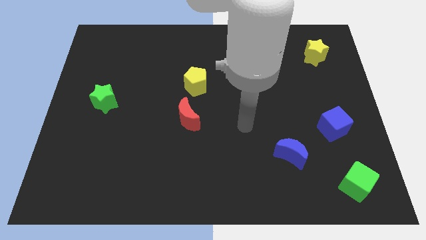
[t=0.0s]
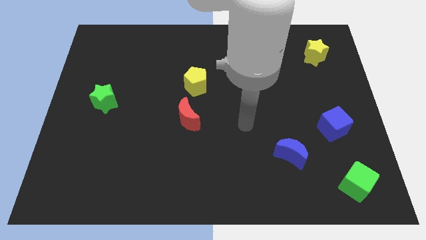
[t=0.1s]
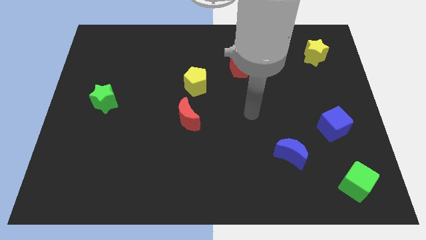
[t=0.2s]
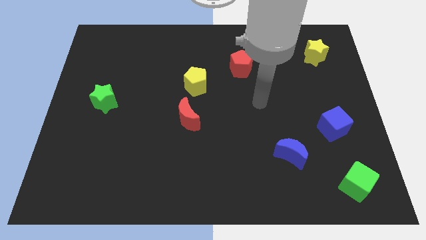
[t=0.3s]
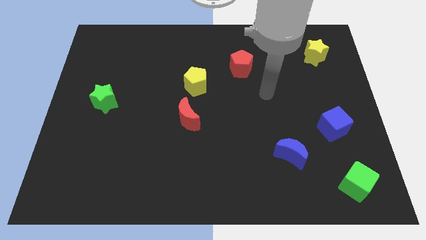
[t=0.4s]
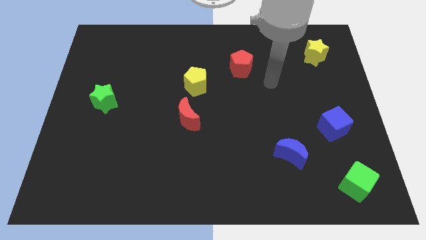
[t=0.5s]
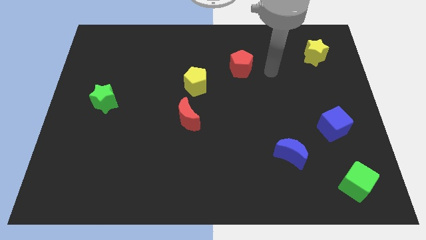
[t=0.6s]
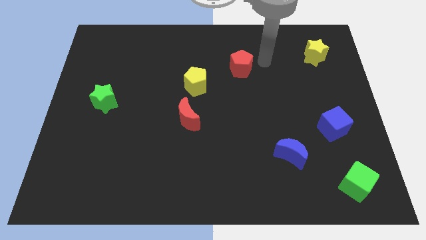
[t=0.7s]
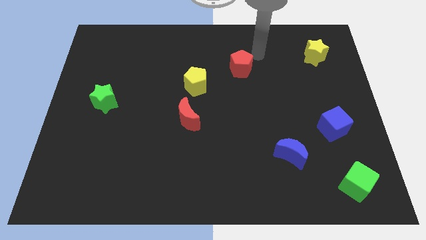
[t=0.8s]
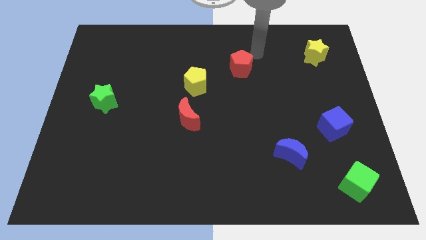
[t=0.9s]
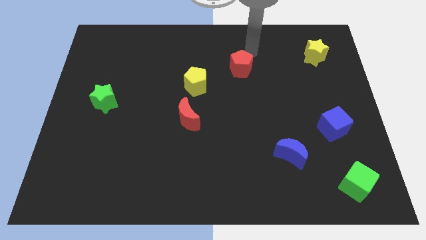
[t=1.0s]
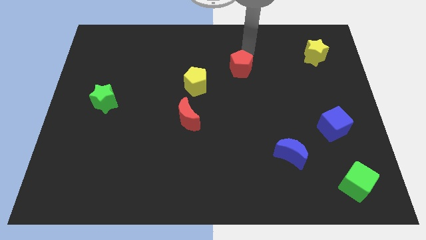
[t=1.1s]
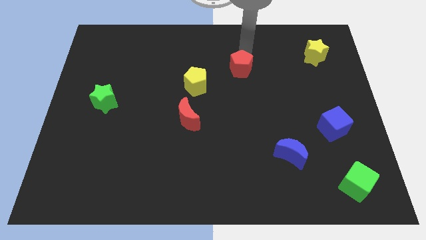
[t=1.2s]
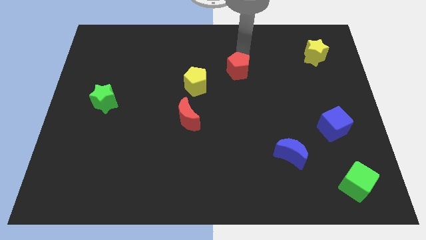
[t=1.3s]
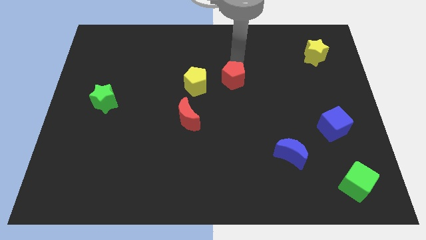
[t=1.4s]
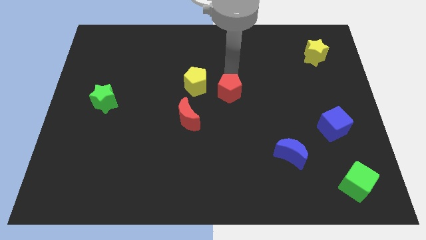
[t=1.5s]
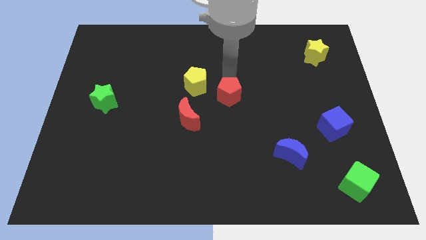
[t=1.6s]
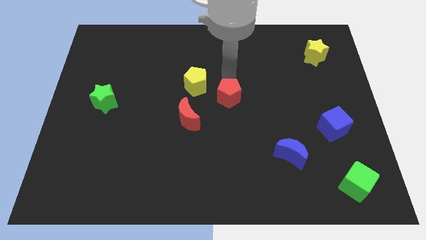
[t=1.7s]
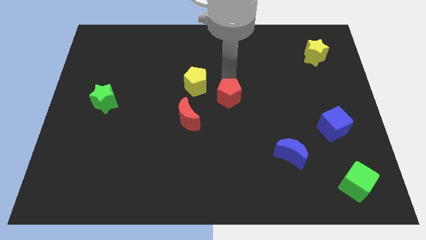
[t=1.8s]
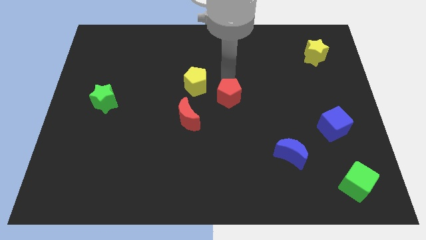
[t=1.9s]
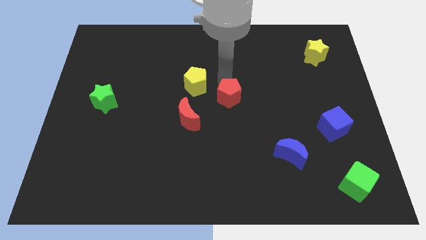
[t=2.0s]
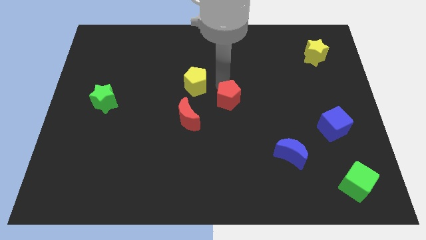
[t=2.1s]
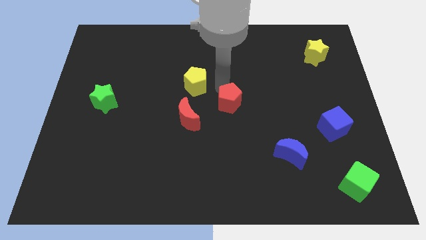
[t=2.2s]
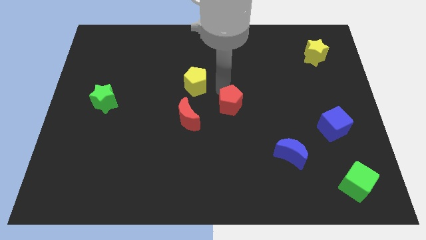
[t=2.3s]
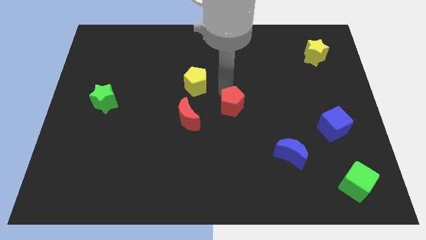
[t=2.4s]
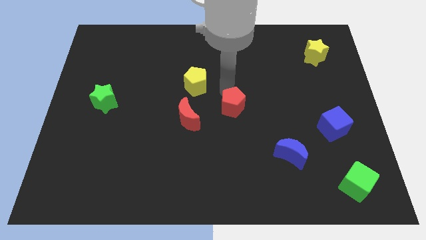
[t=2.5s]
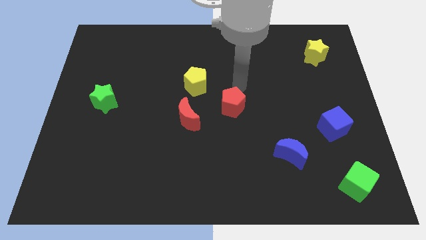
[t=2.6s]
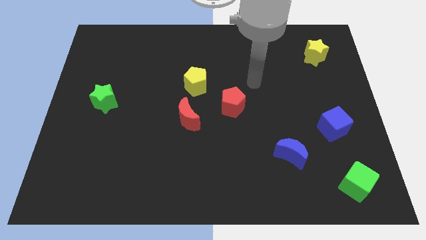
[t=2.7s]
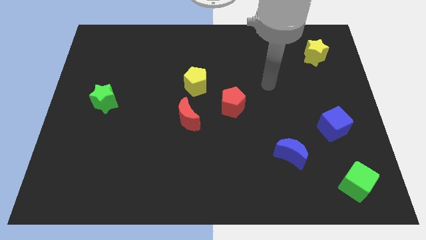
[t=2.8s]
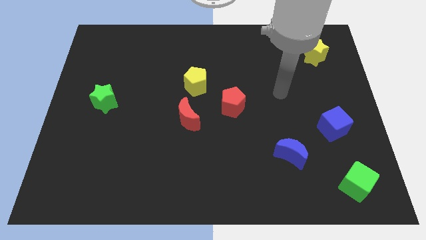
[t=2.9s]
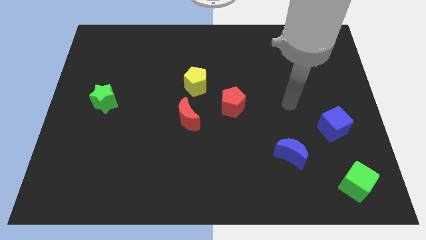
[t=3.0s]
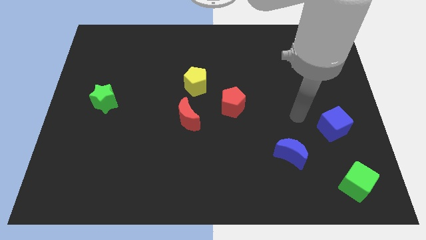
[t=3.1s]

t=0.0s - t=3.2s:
place the red pentagon at the bottom right of the yellow pentagon

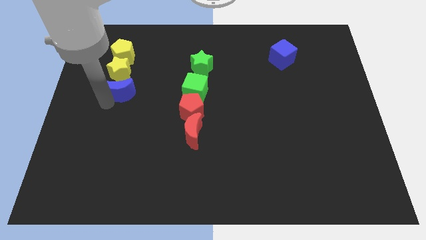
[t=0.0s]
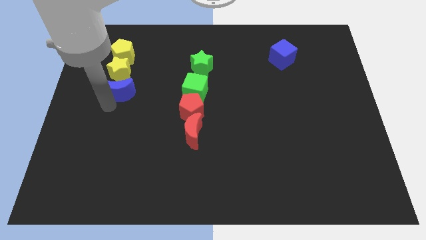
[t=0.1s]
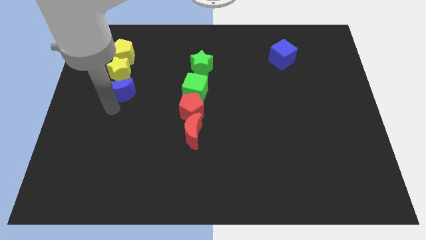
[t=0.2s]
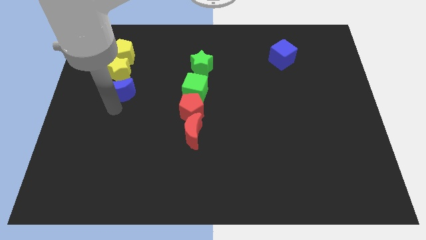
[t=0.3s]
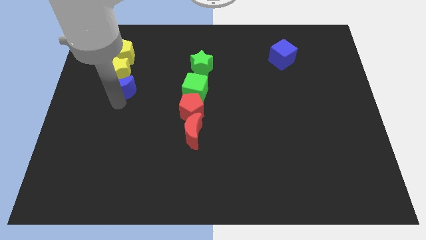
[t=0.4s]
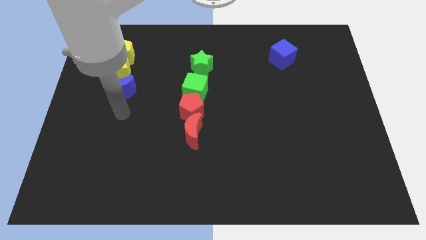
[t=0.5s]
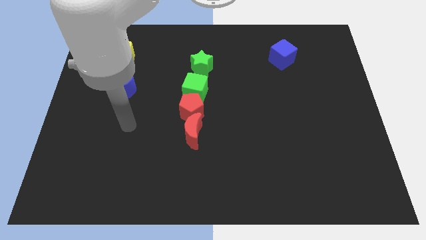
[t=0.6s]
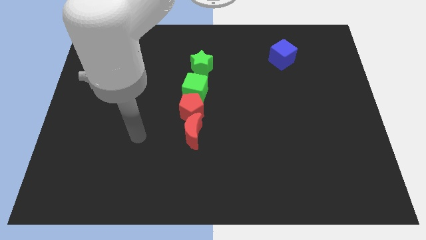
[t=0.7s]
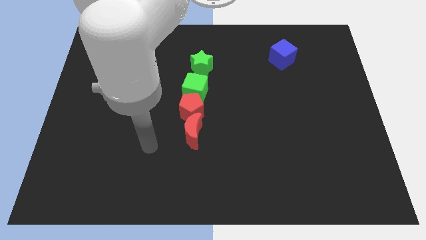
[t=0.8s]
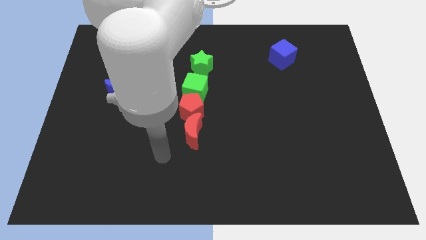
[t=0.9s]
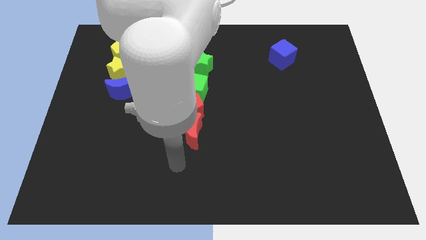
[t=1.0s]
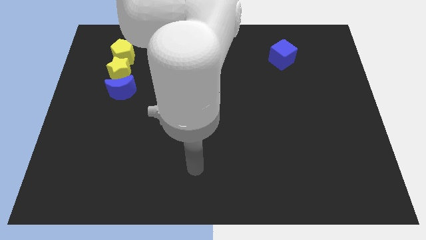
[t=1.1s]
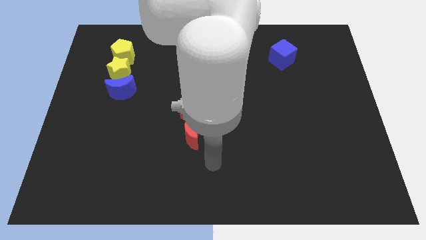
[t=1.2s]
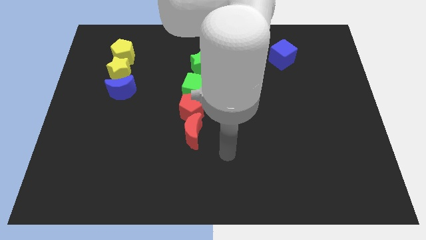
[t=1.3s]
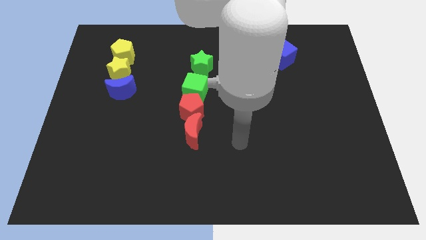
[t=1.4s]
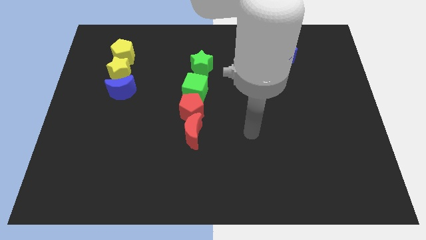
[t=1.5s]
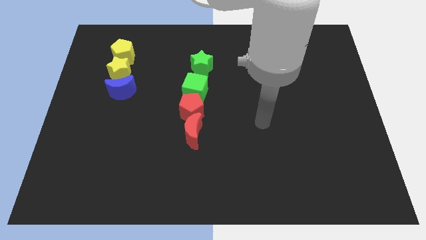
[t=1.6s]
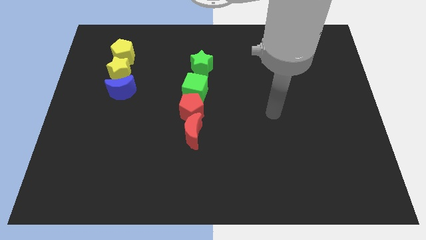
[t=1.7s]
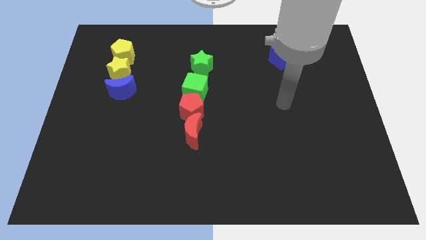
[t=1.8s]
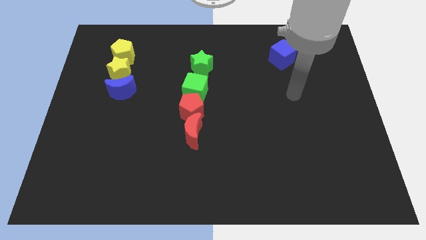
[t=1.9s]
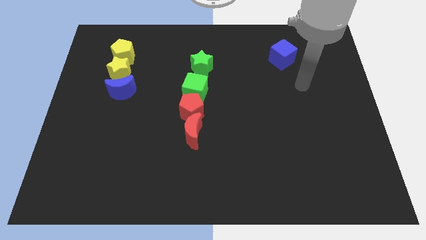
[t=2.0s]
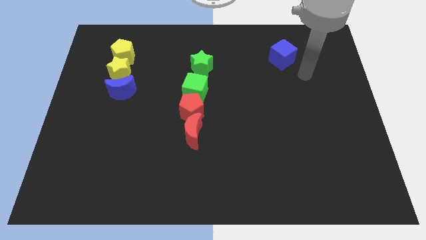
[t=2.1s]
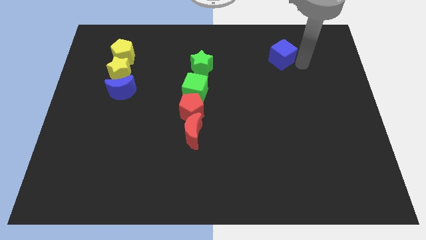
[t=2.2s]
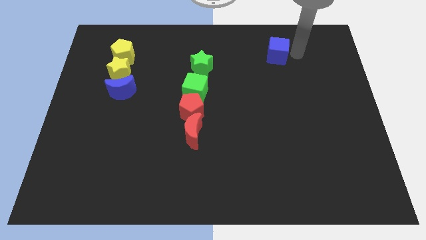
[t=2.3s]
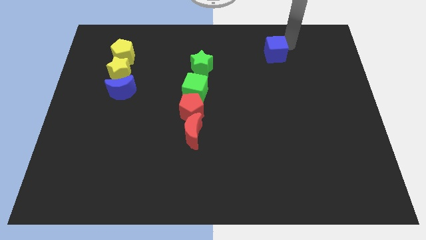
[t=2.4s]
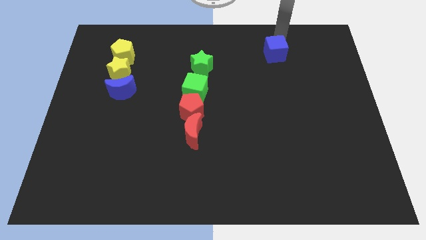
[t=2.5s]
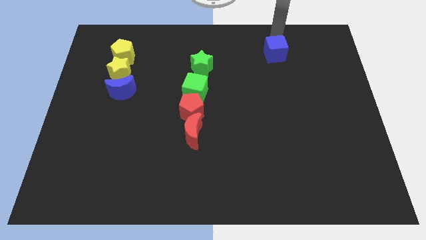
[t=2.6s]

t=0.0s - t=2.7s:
move your arm away from the blue moon

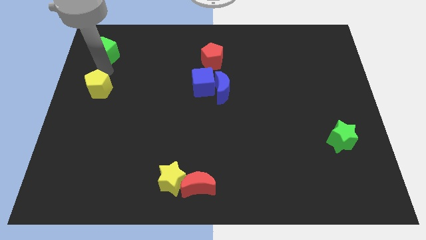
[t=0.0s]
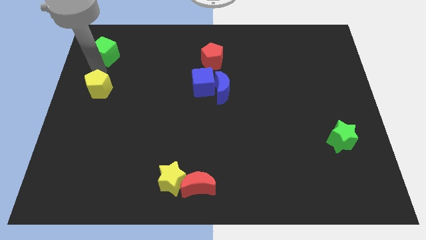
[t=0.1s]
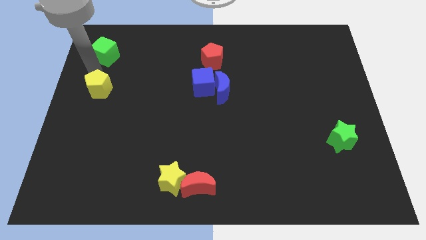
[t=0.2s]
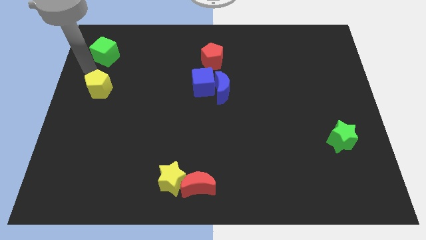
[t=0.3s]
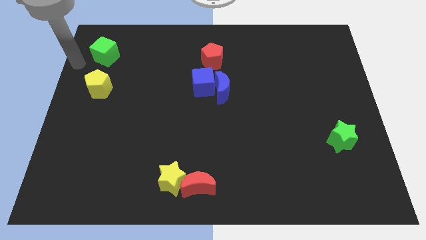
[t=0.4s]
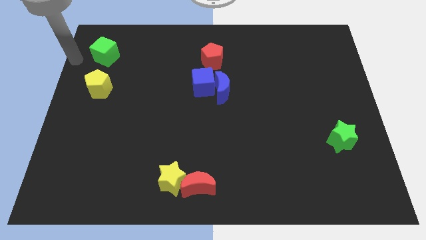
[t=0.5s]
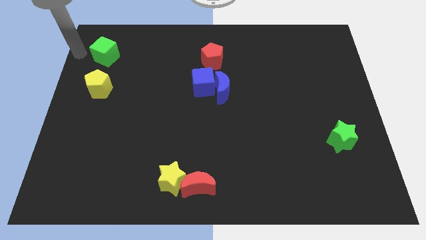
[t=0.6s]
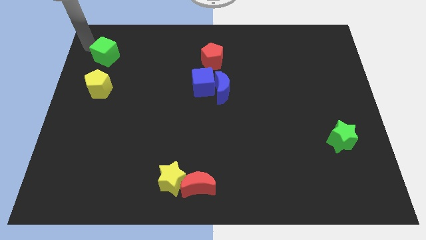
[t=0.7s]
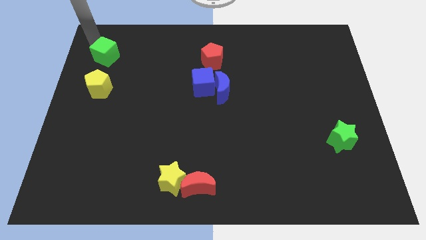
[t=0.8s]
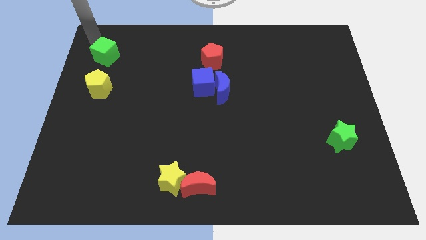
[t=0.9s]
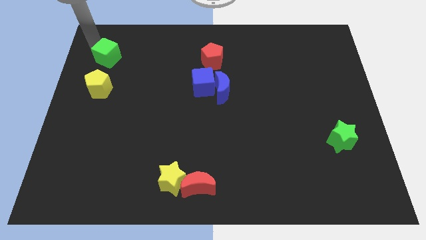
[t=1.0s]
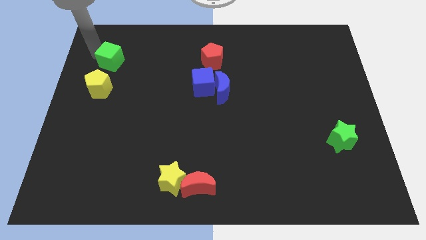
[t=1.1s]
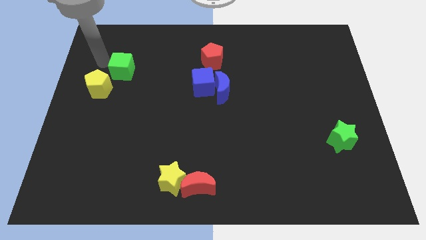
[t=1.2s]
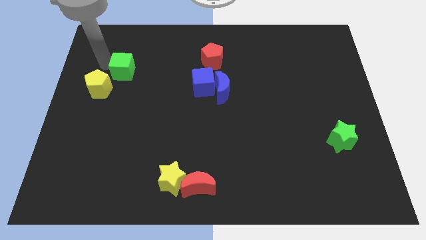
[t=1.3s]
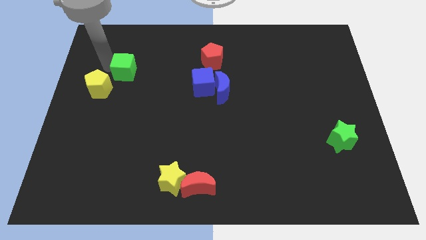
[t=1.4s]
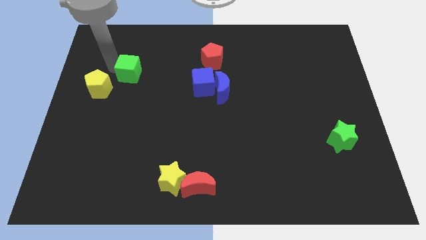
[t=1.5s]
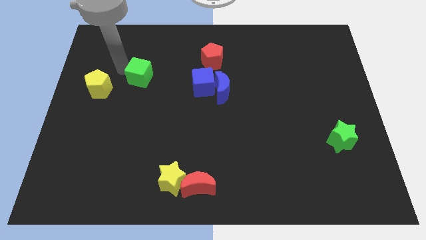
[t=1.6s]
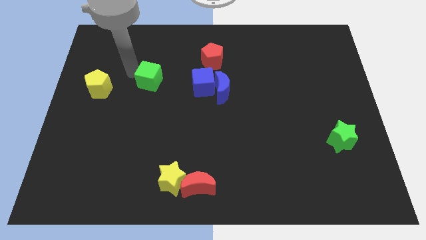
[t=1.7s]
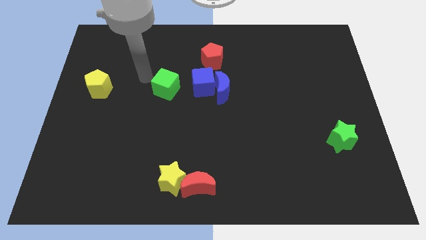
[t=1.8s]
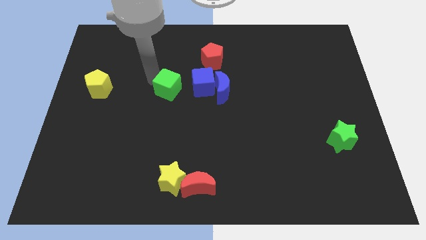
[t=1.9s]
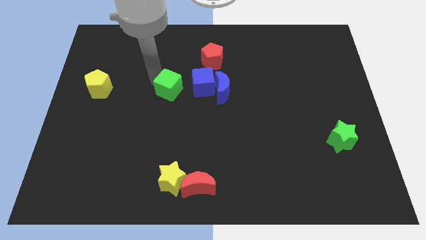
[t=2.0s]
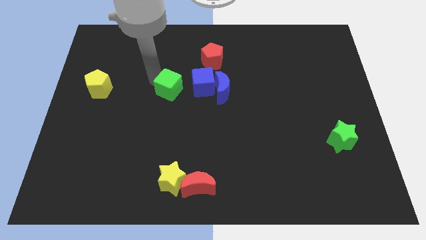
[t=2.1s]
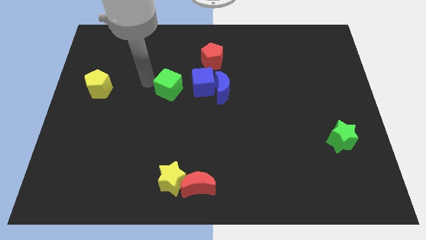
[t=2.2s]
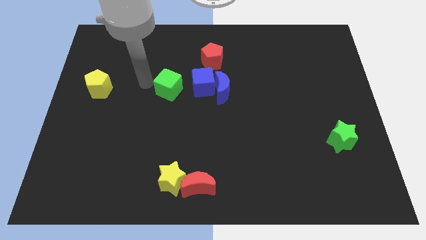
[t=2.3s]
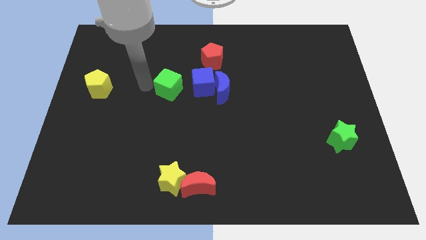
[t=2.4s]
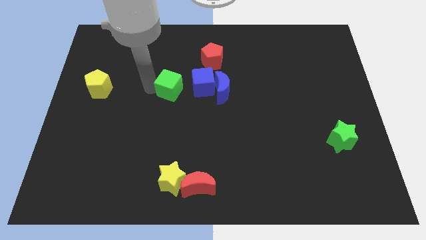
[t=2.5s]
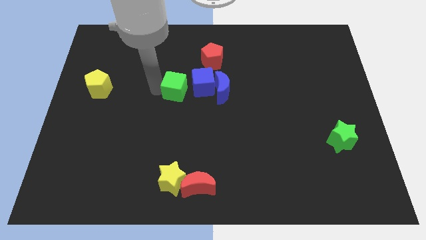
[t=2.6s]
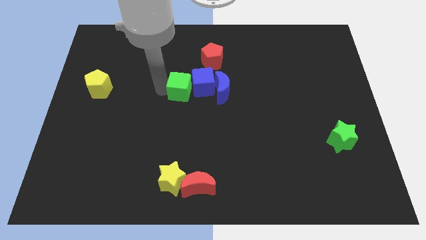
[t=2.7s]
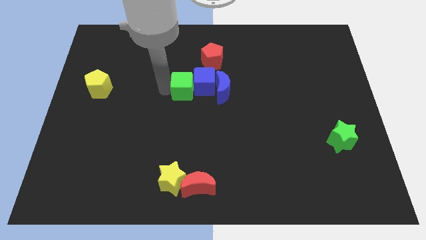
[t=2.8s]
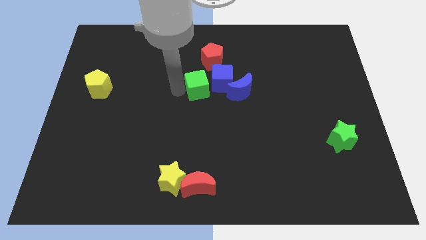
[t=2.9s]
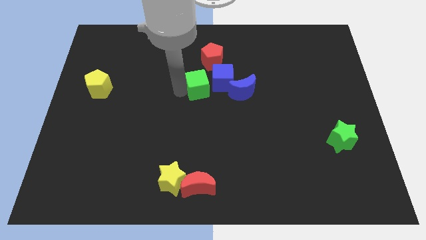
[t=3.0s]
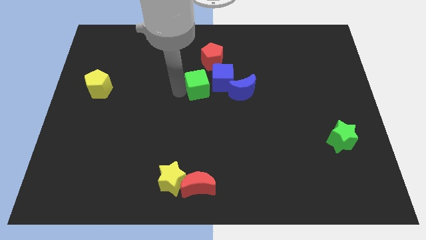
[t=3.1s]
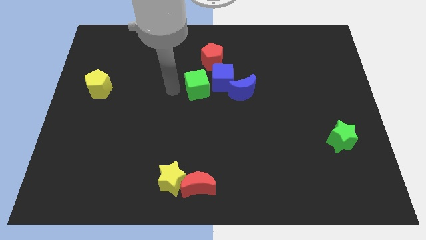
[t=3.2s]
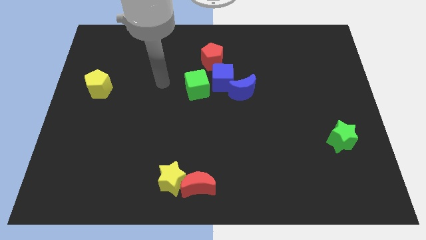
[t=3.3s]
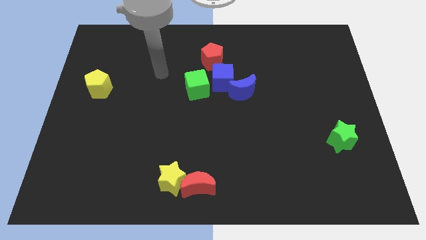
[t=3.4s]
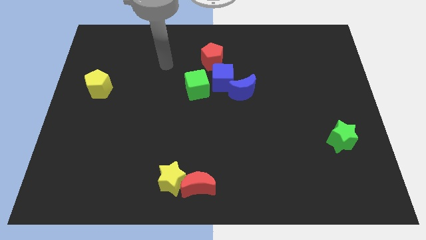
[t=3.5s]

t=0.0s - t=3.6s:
push green cube into blue cube
